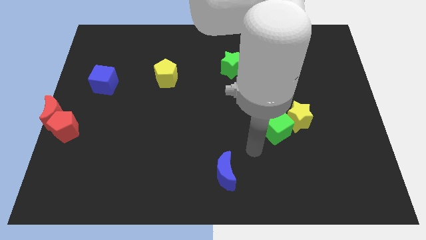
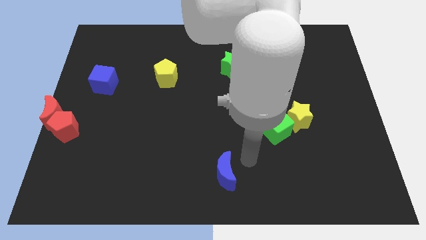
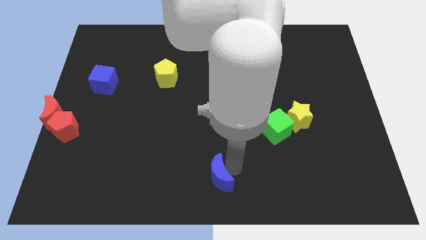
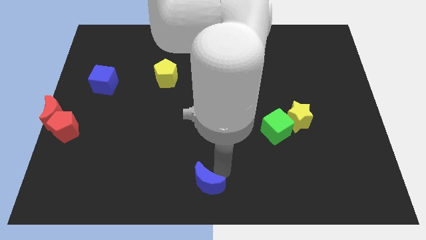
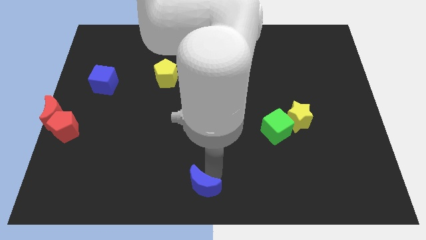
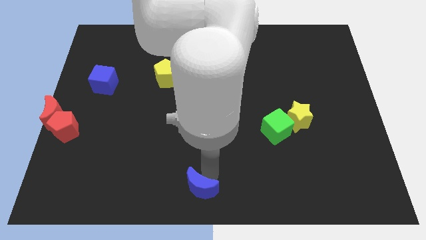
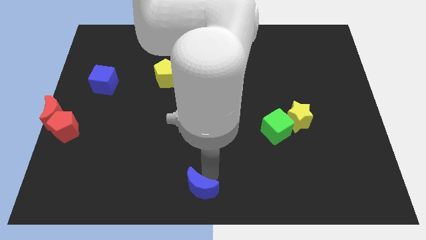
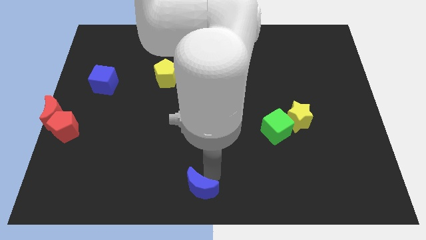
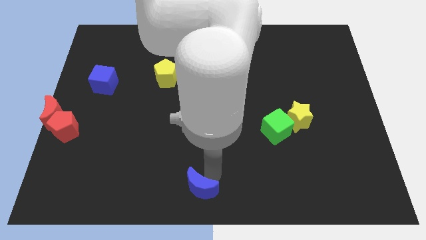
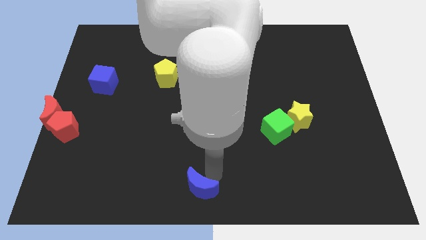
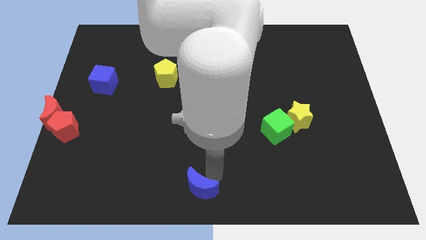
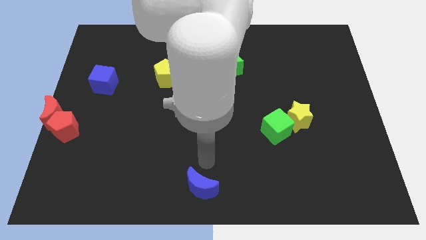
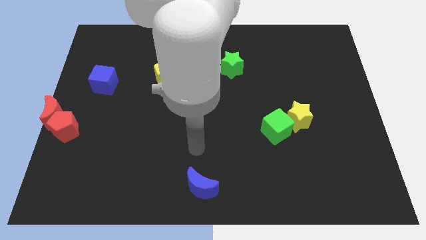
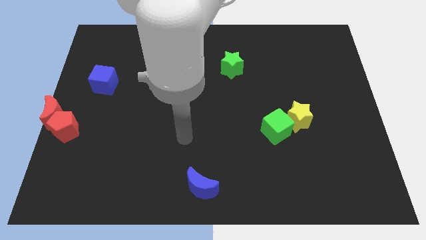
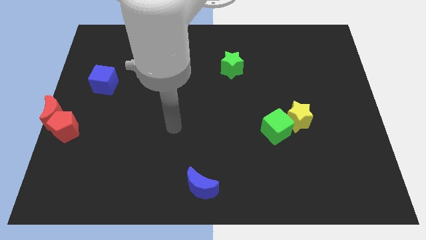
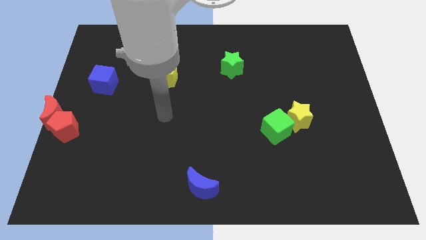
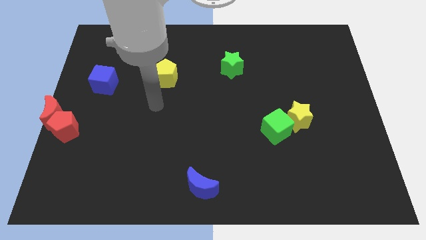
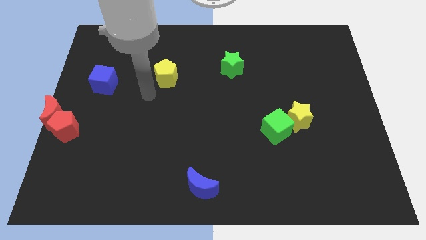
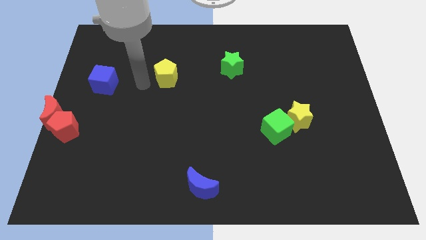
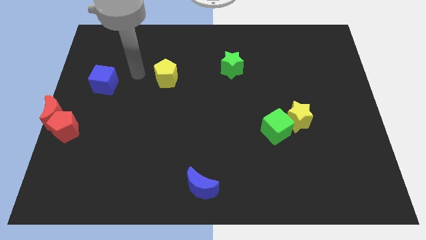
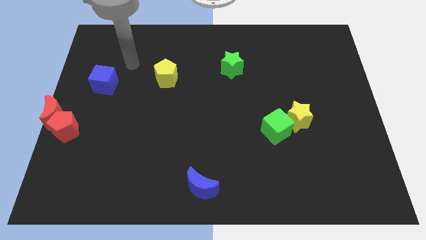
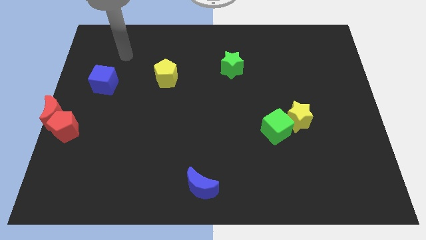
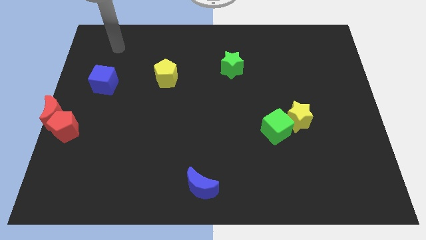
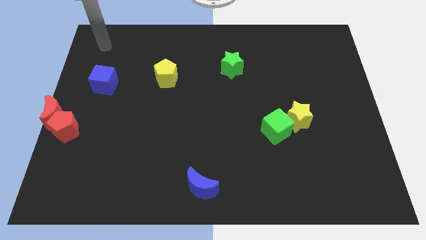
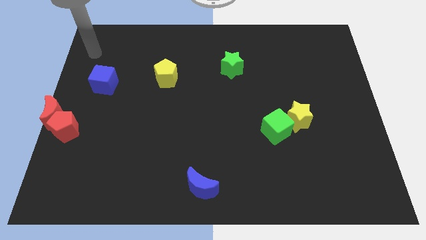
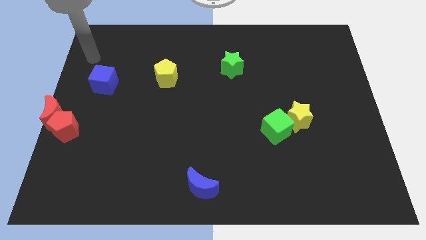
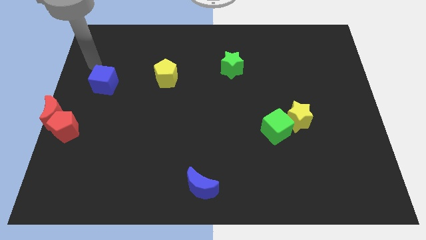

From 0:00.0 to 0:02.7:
push the blue moon slightly downward

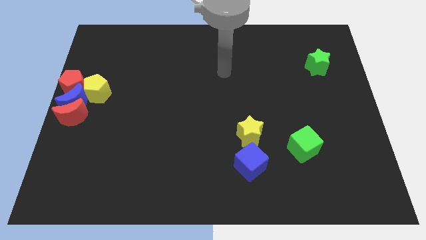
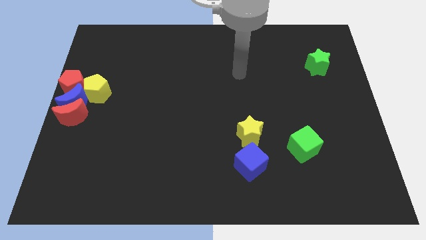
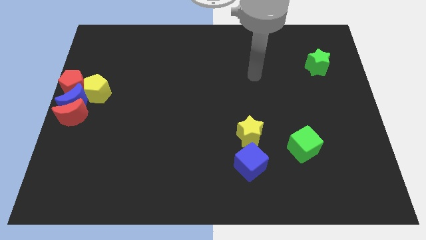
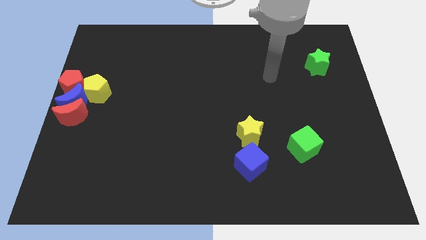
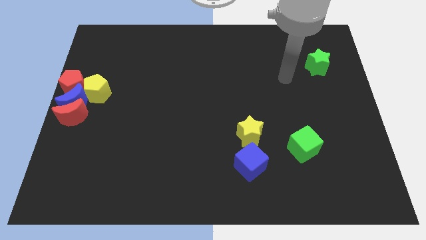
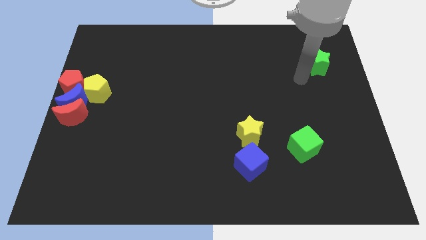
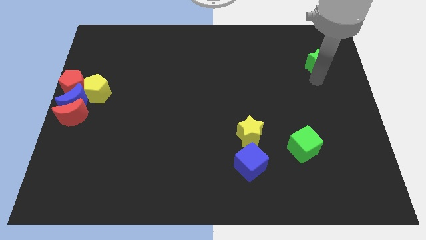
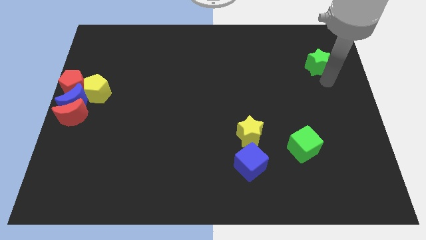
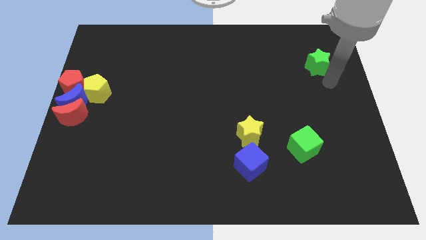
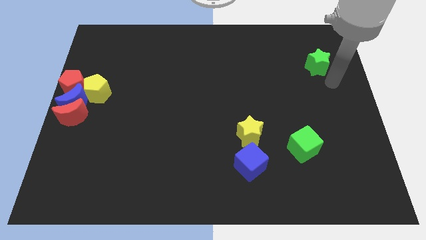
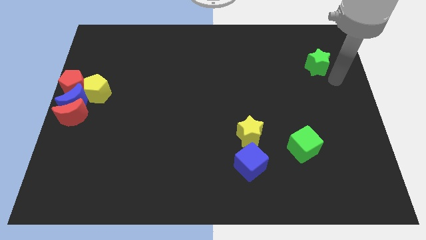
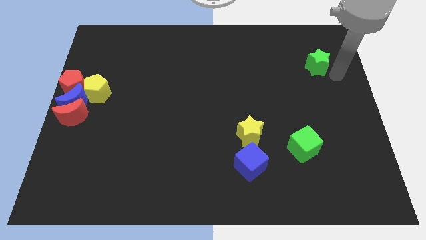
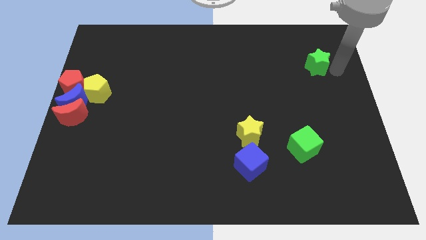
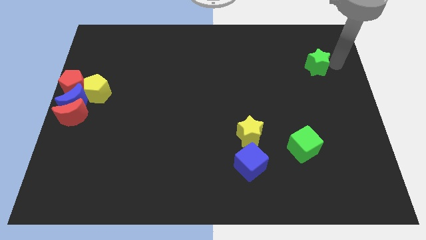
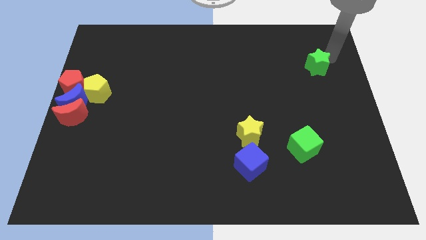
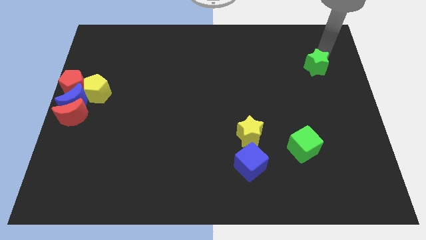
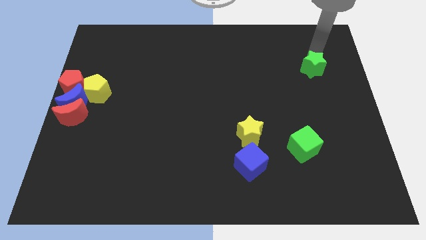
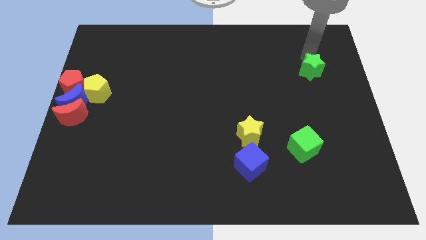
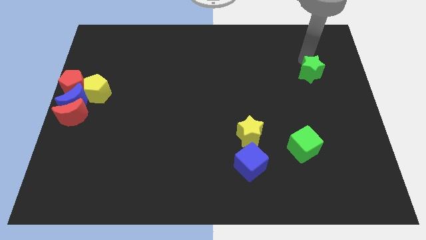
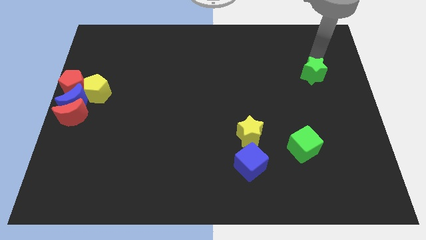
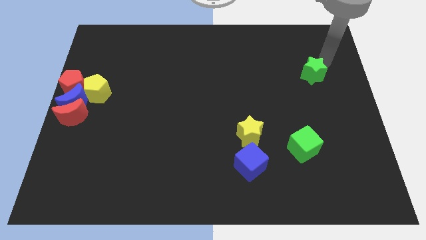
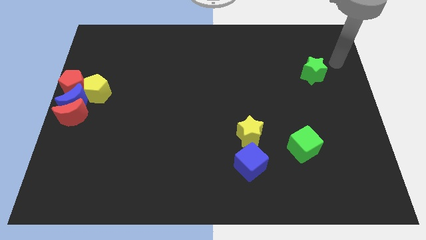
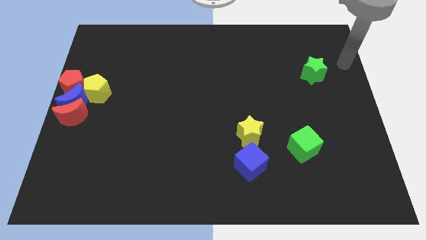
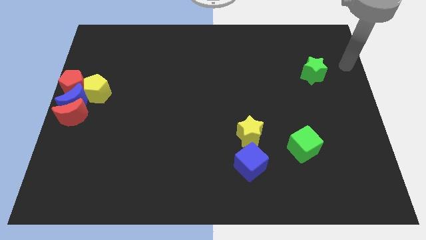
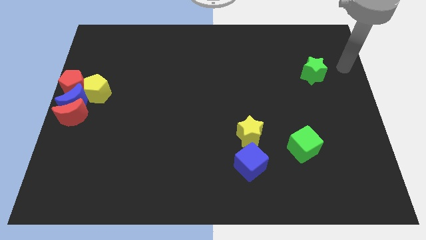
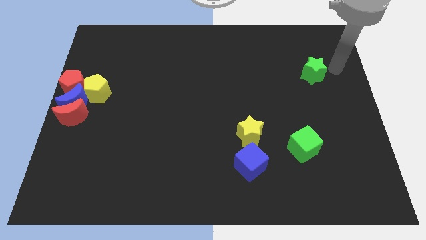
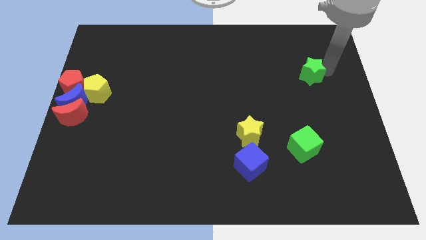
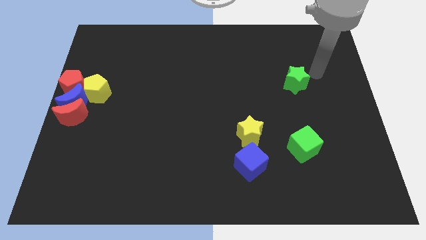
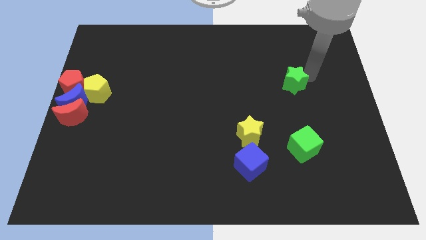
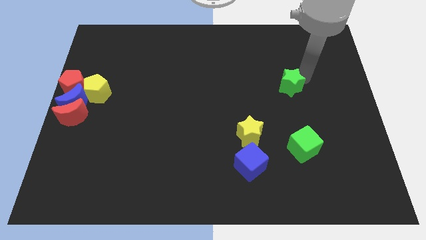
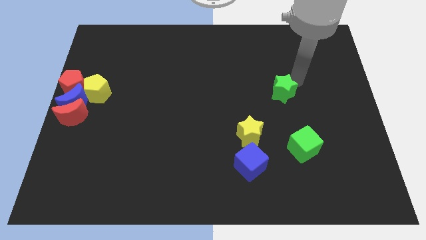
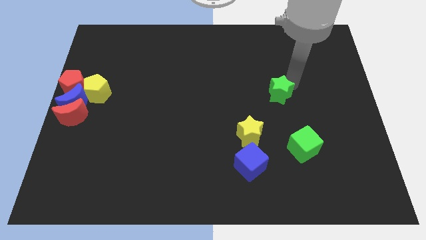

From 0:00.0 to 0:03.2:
slide the green star towards the yellow star

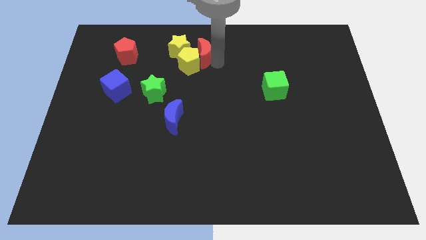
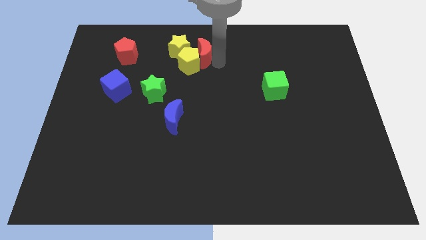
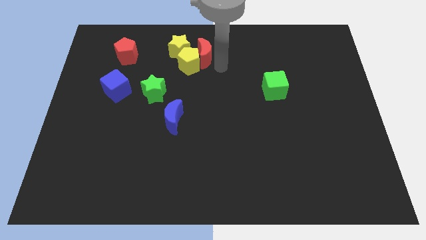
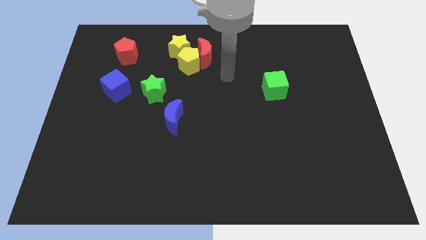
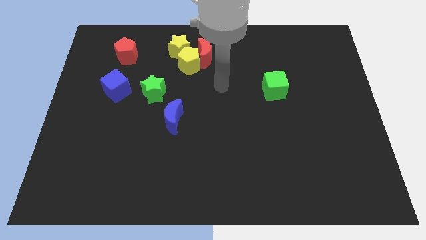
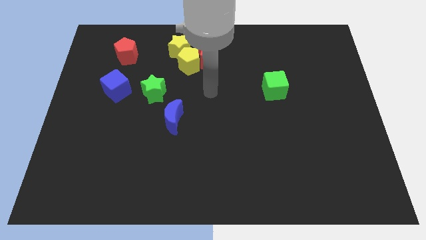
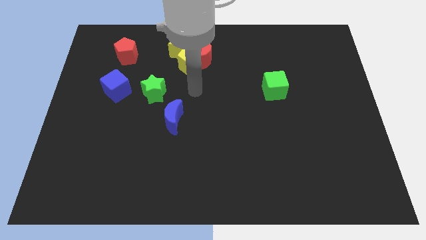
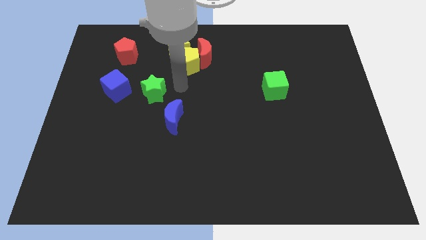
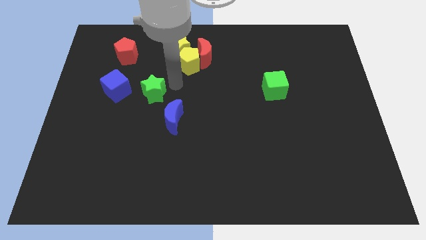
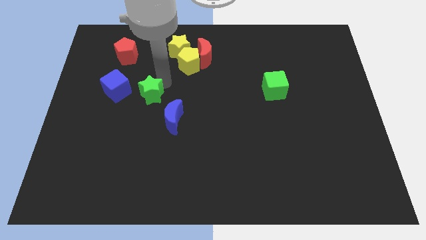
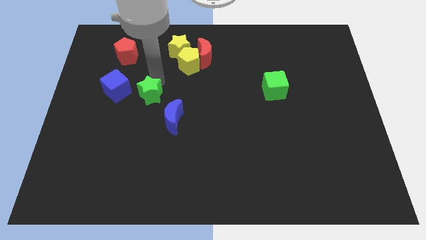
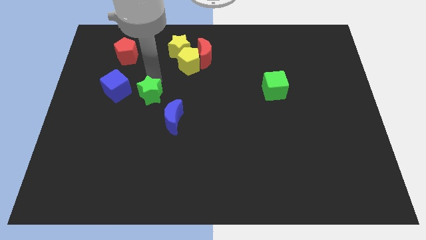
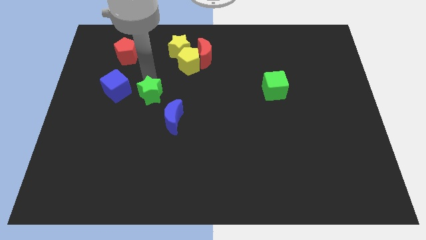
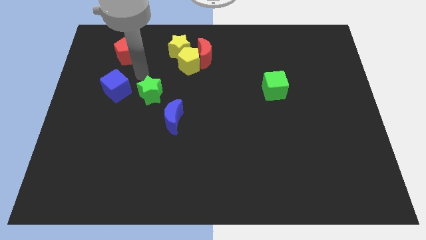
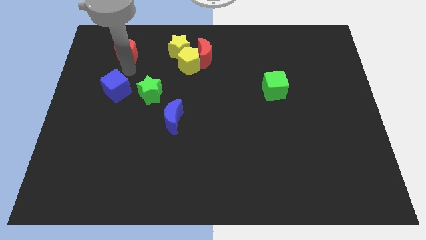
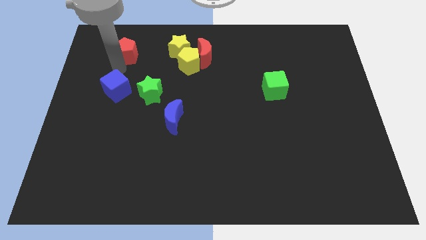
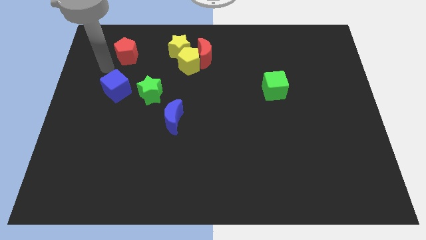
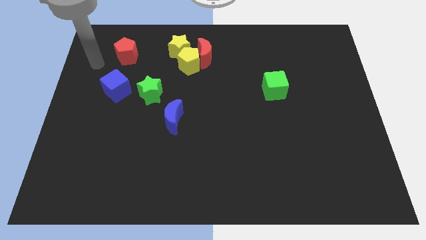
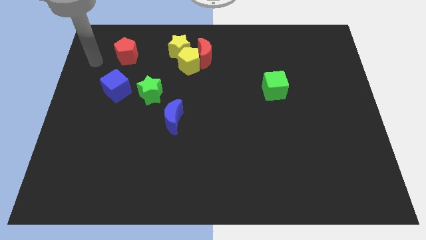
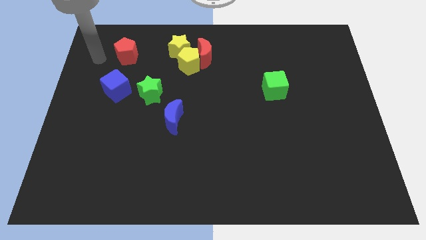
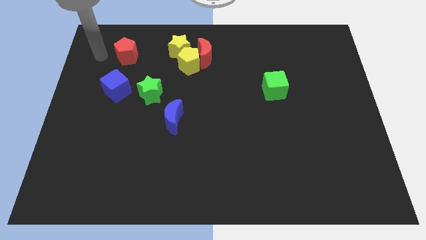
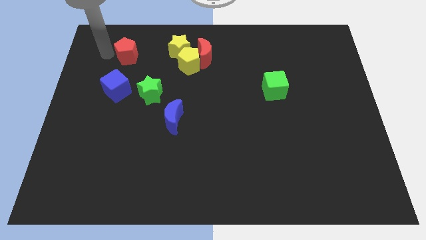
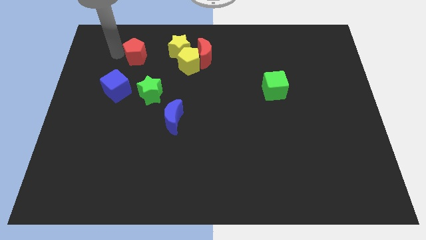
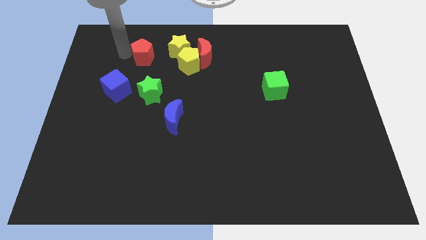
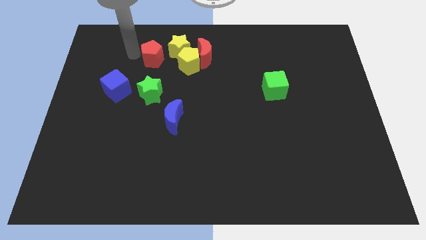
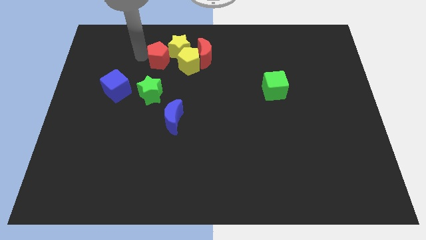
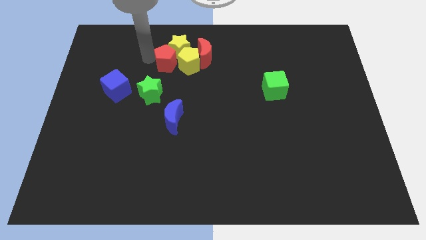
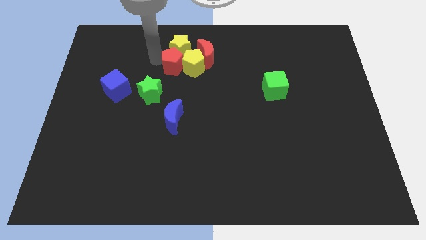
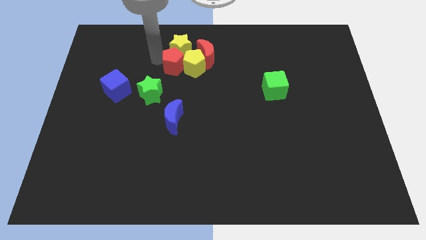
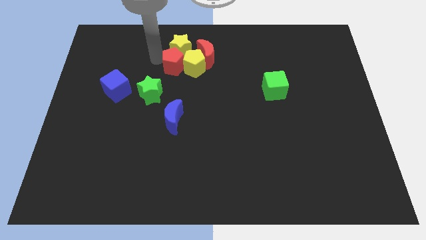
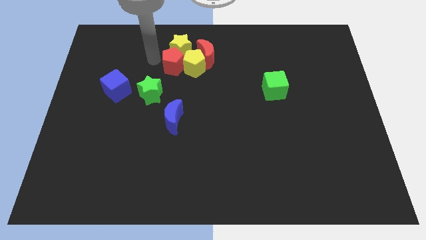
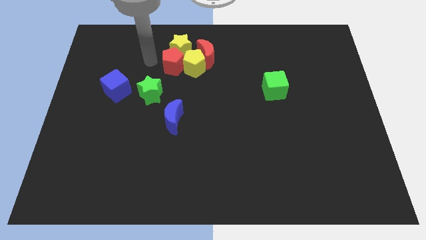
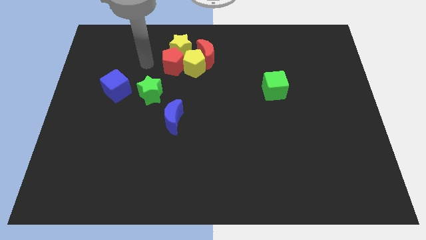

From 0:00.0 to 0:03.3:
move the red pentagon to the bottom left to the yellow star
